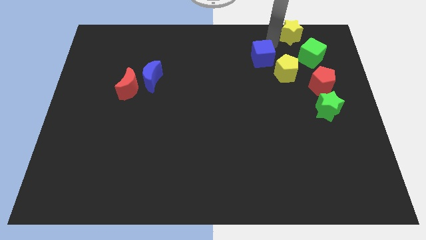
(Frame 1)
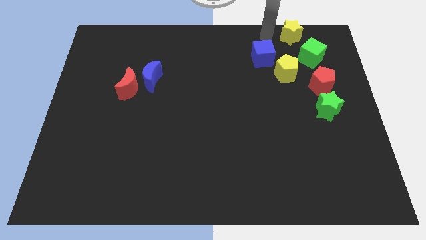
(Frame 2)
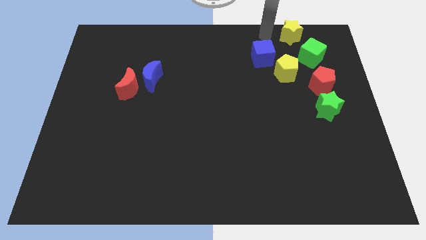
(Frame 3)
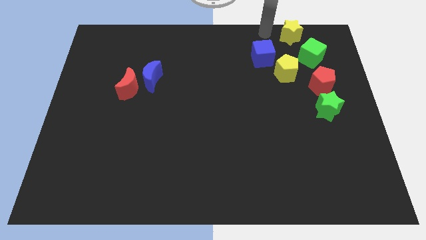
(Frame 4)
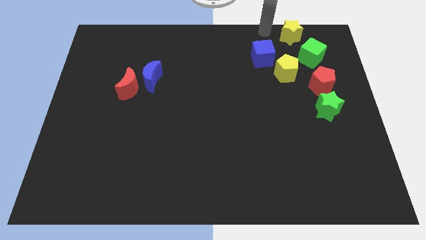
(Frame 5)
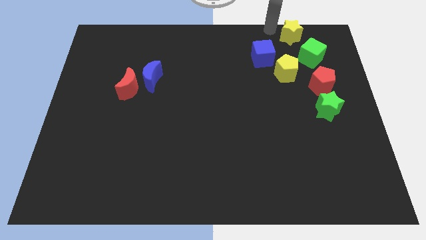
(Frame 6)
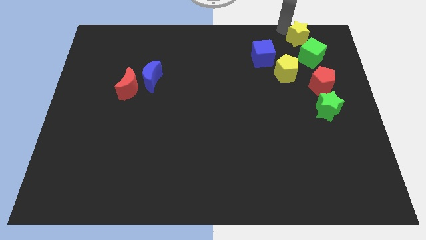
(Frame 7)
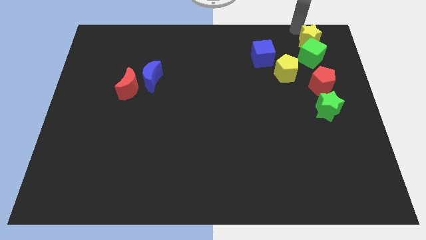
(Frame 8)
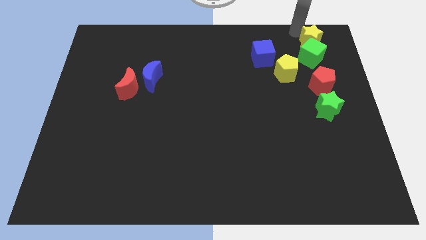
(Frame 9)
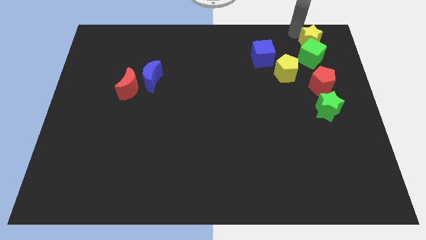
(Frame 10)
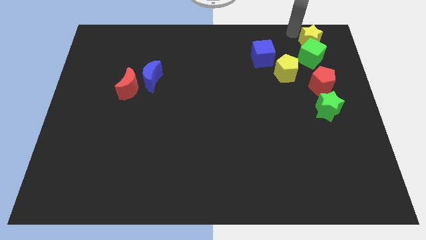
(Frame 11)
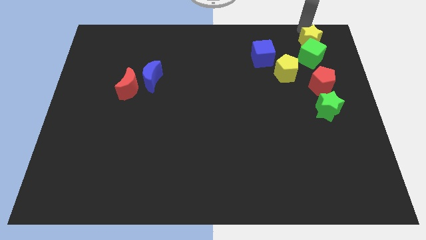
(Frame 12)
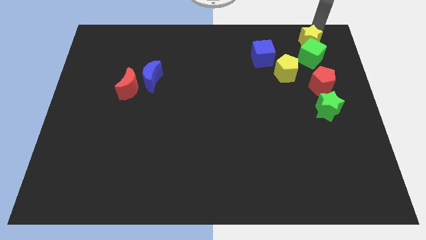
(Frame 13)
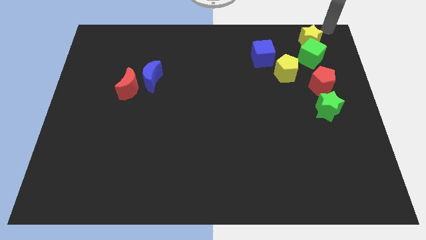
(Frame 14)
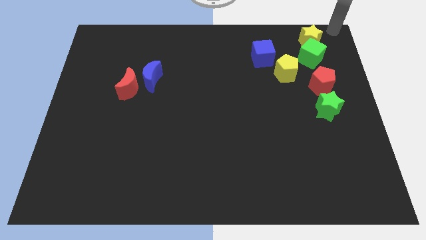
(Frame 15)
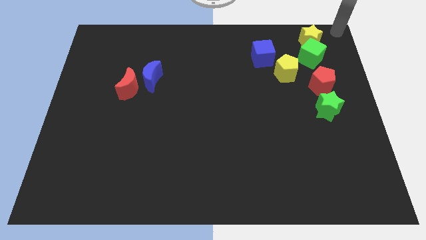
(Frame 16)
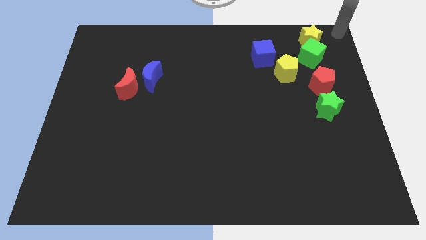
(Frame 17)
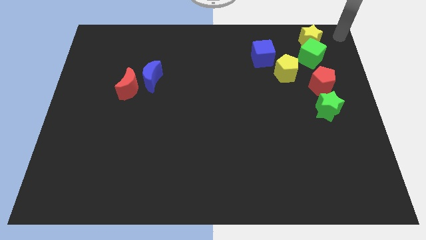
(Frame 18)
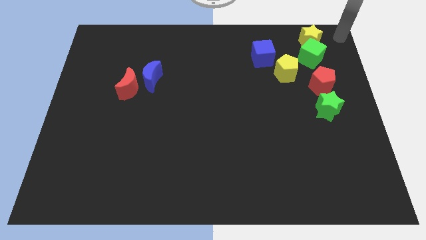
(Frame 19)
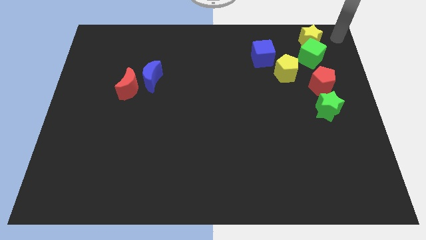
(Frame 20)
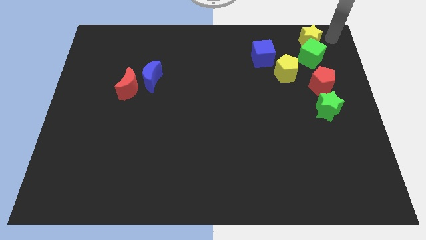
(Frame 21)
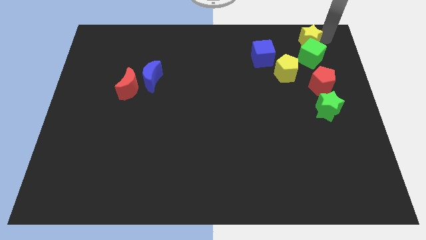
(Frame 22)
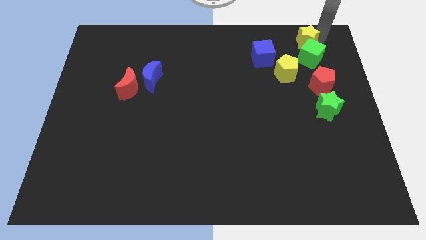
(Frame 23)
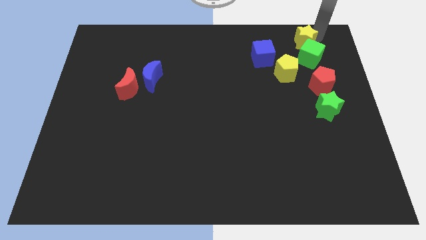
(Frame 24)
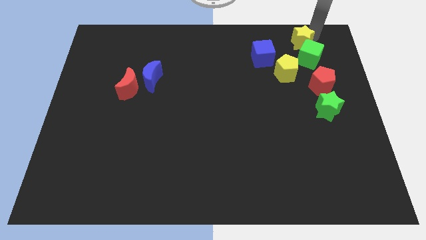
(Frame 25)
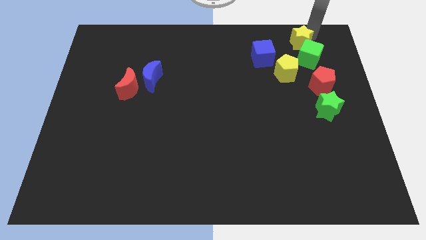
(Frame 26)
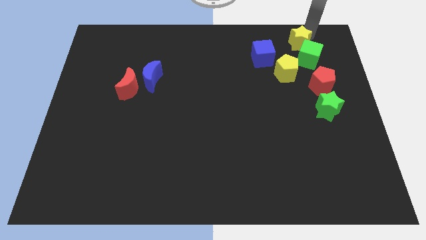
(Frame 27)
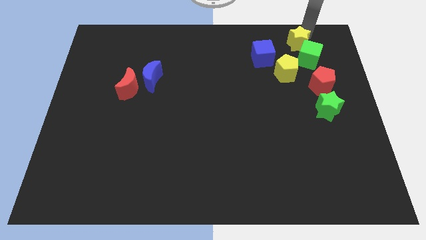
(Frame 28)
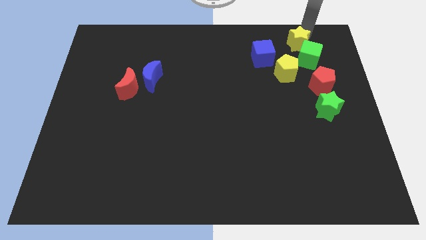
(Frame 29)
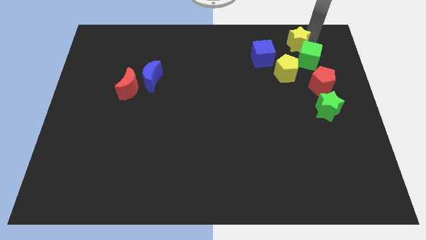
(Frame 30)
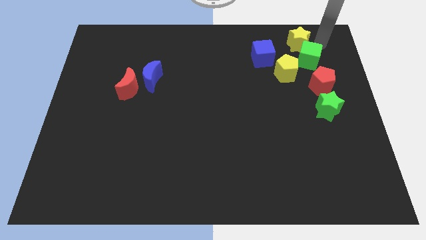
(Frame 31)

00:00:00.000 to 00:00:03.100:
move the yellow star into the top left side of the green cube

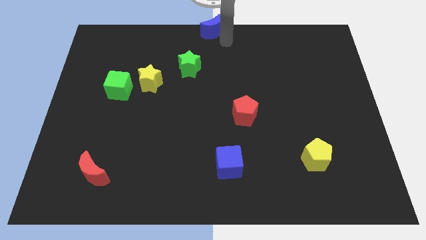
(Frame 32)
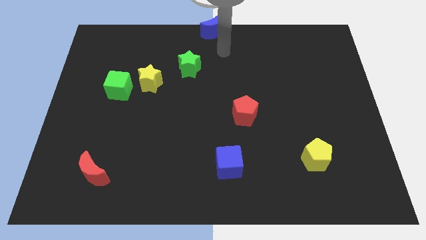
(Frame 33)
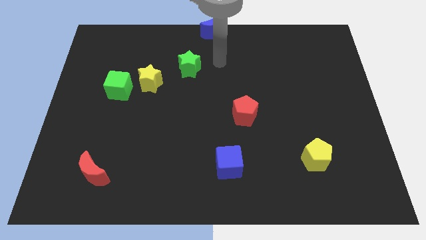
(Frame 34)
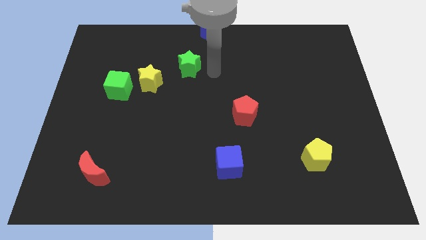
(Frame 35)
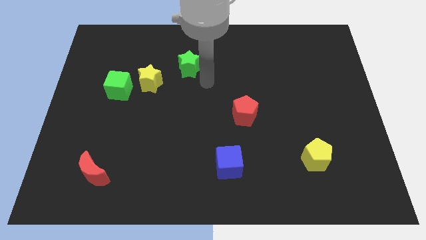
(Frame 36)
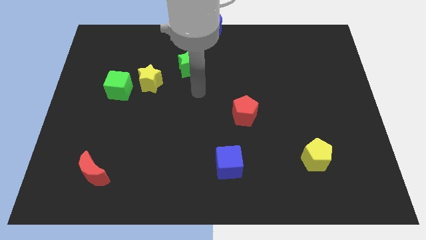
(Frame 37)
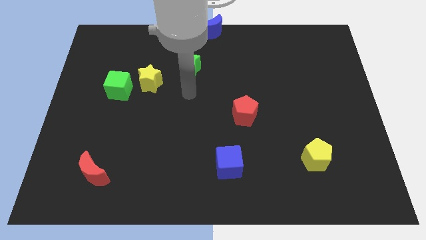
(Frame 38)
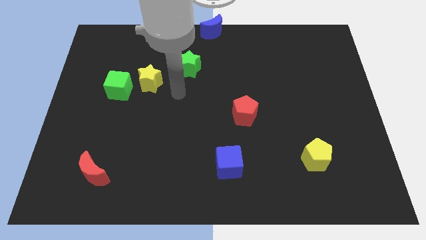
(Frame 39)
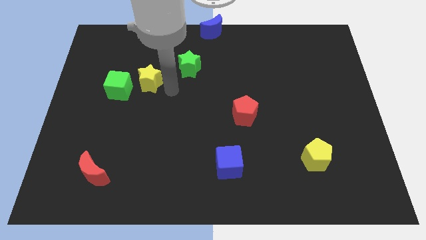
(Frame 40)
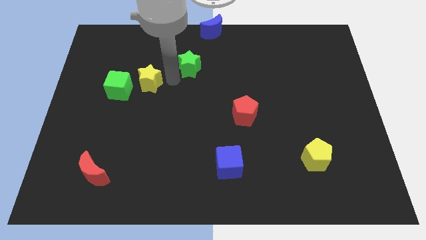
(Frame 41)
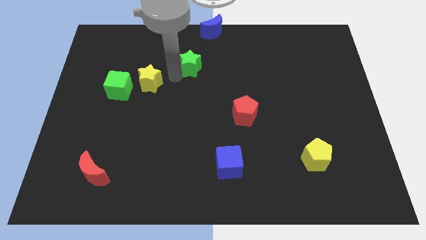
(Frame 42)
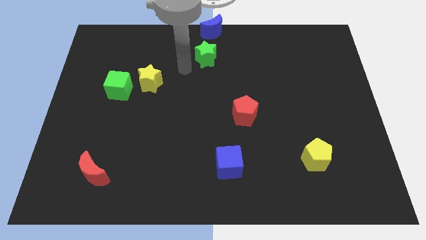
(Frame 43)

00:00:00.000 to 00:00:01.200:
place the arm bottom left to the green star

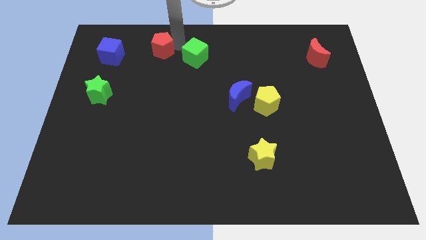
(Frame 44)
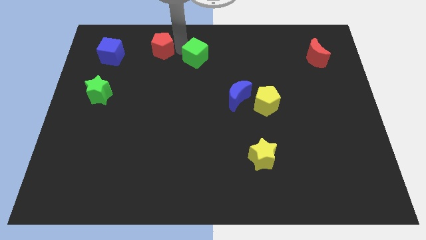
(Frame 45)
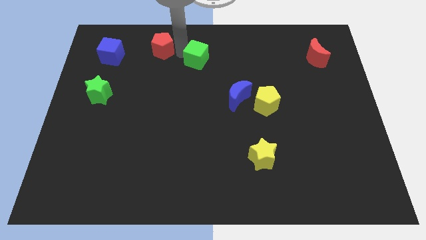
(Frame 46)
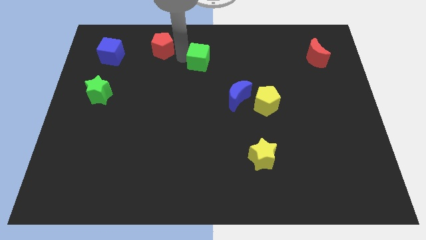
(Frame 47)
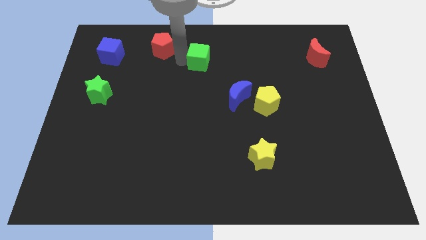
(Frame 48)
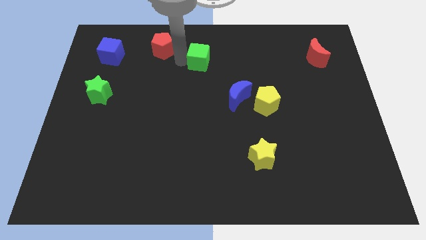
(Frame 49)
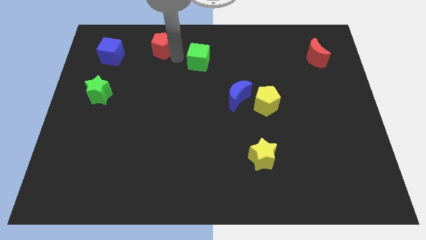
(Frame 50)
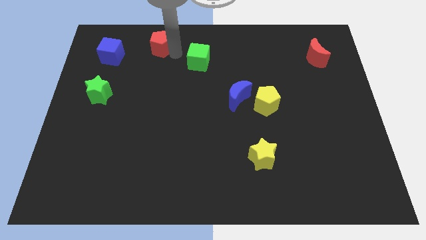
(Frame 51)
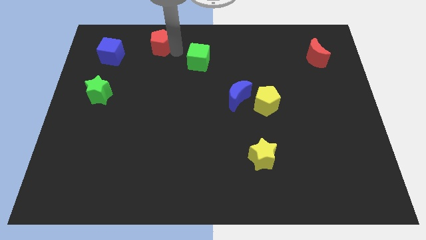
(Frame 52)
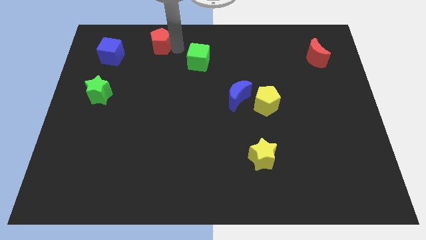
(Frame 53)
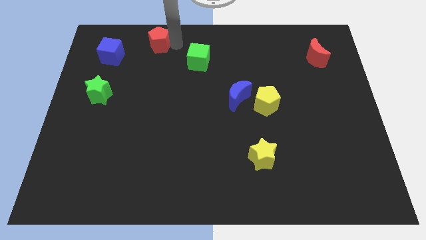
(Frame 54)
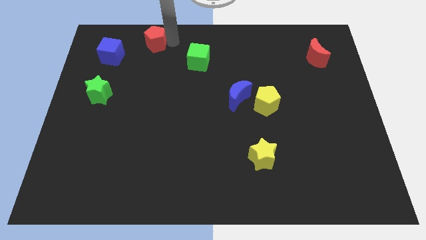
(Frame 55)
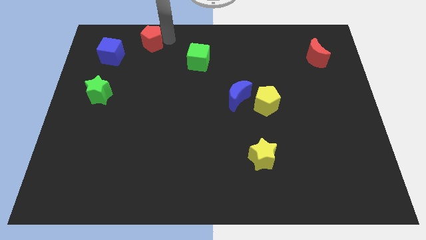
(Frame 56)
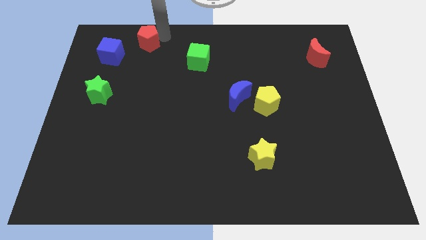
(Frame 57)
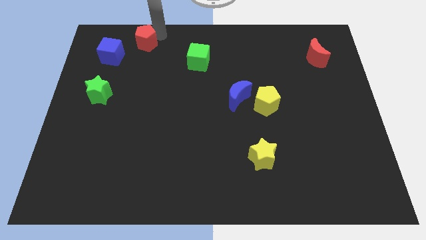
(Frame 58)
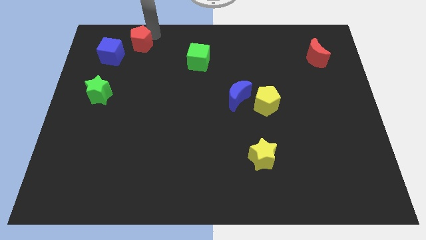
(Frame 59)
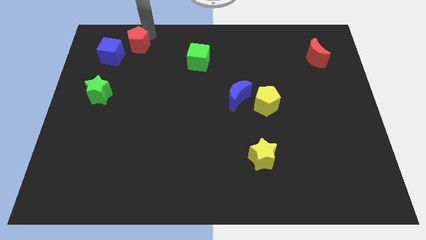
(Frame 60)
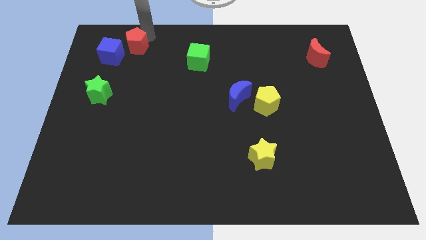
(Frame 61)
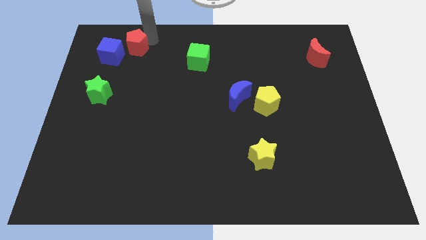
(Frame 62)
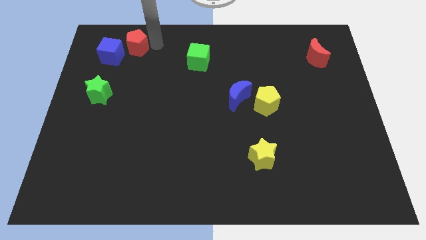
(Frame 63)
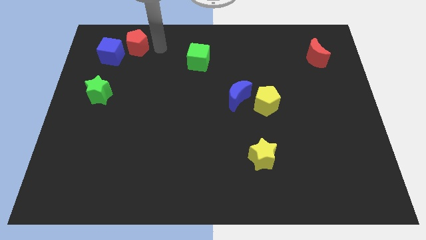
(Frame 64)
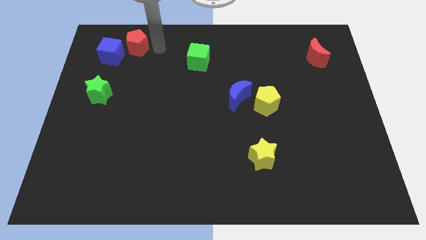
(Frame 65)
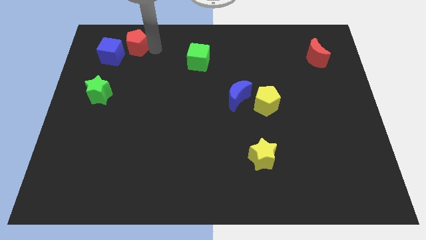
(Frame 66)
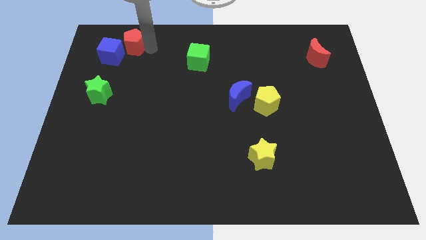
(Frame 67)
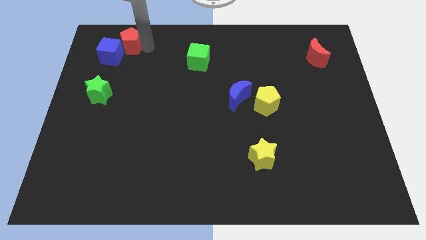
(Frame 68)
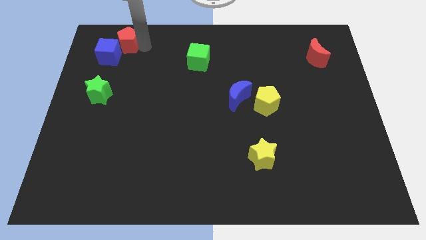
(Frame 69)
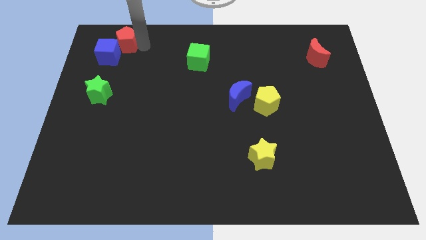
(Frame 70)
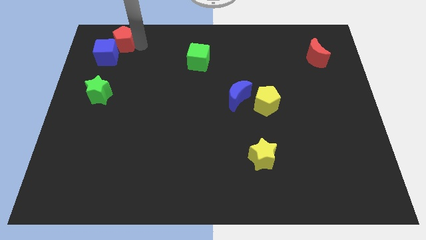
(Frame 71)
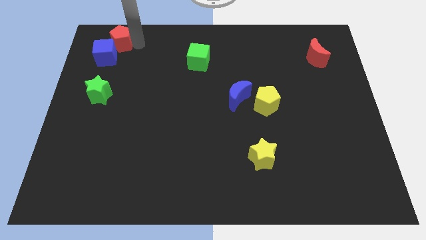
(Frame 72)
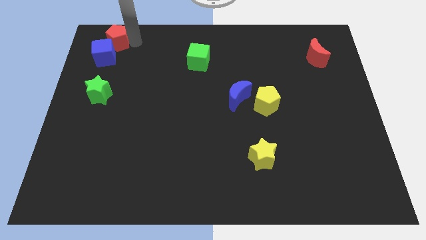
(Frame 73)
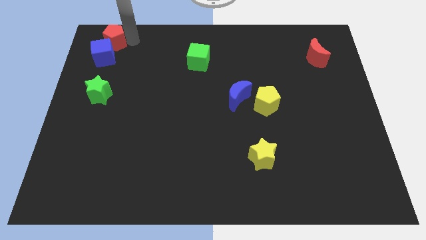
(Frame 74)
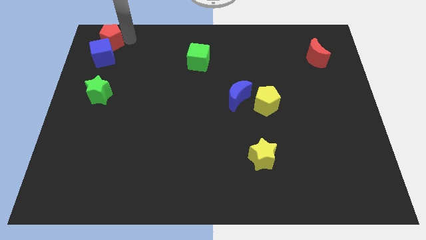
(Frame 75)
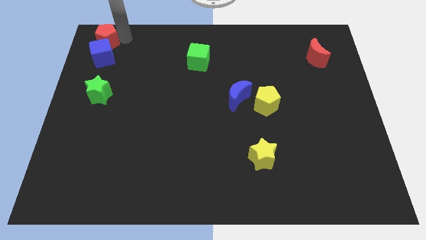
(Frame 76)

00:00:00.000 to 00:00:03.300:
place the red pentagon on top of the blue cube

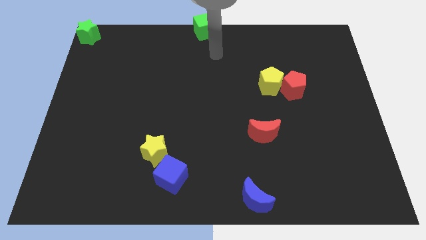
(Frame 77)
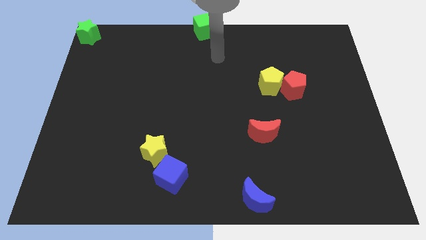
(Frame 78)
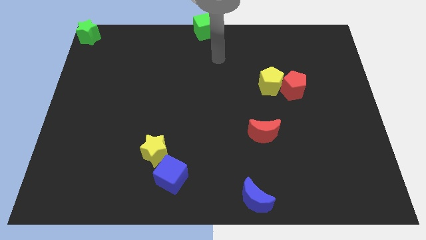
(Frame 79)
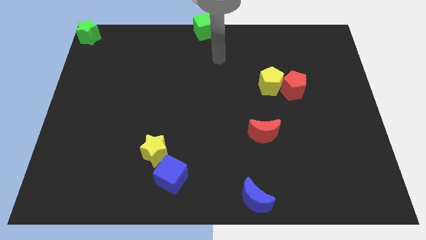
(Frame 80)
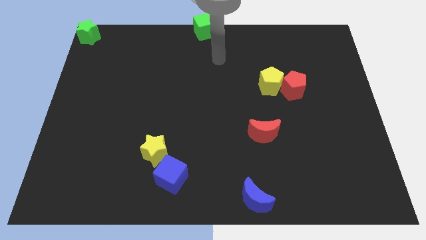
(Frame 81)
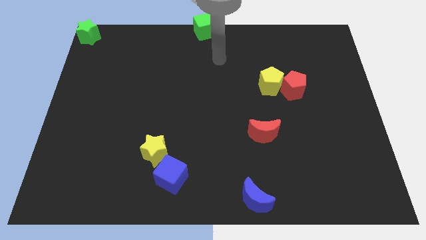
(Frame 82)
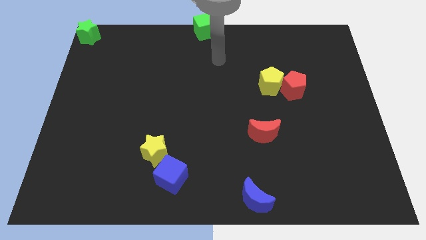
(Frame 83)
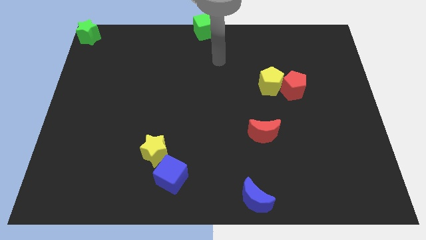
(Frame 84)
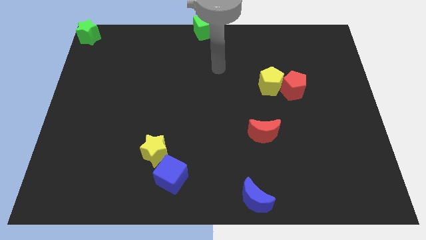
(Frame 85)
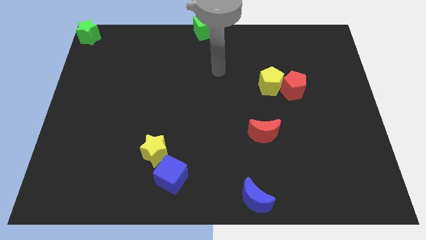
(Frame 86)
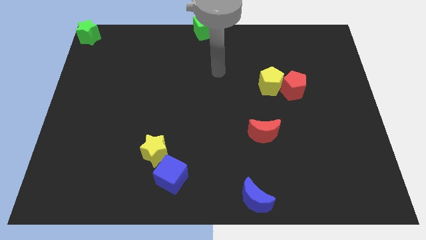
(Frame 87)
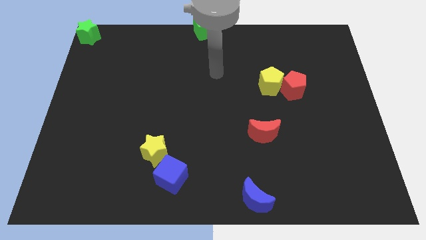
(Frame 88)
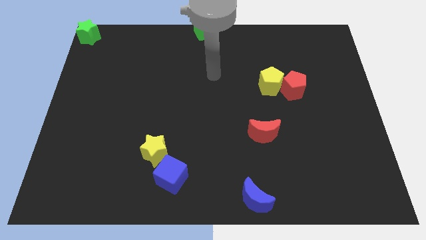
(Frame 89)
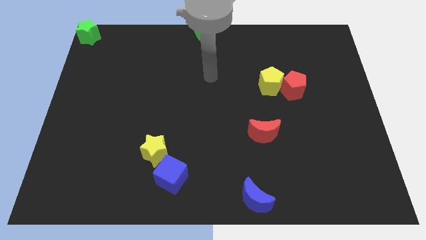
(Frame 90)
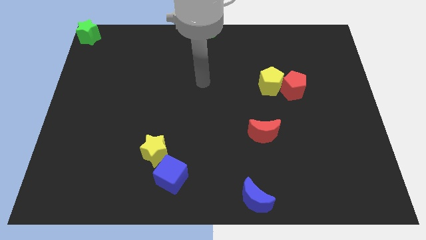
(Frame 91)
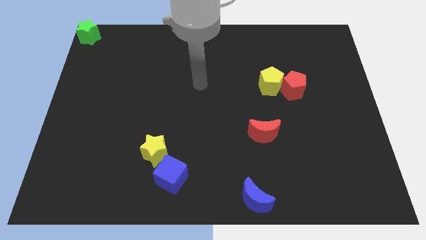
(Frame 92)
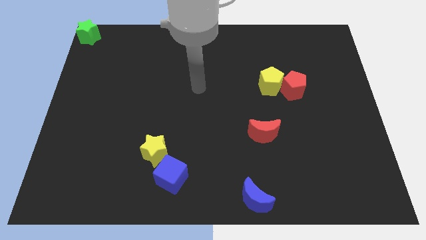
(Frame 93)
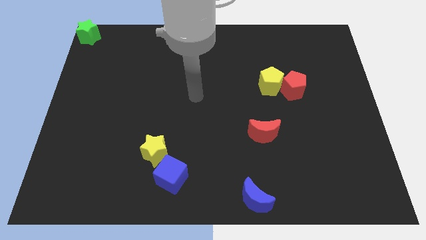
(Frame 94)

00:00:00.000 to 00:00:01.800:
go to the center of the board
